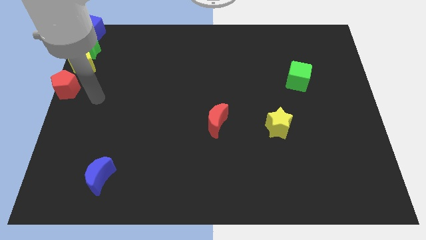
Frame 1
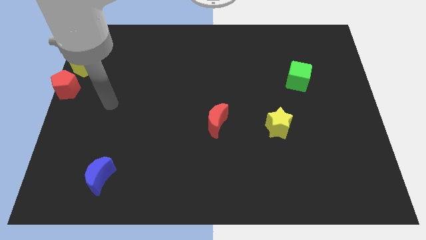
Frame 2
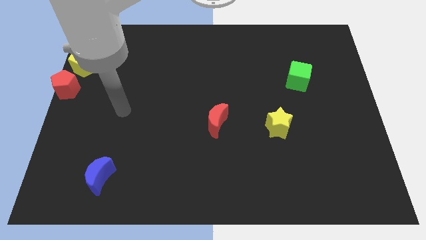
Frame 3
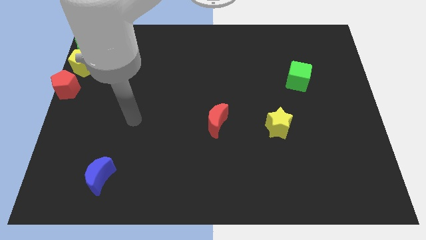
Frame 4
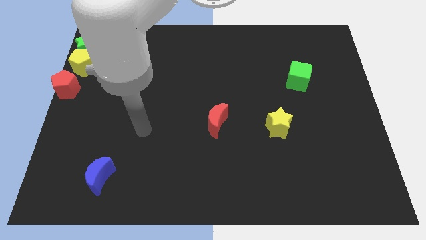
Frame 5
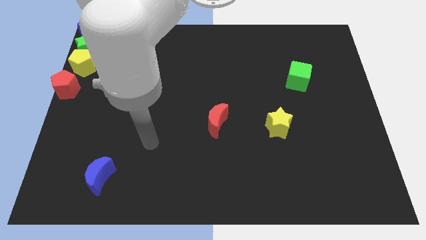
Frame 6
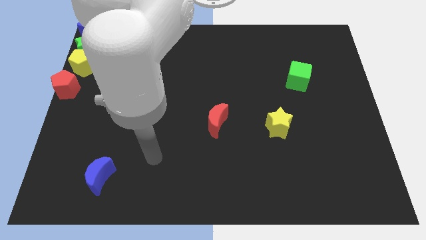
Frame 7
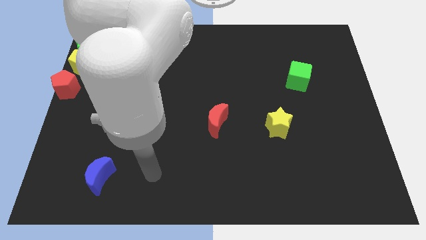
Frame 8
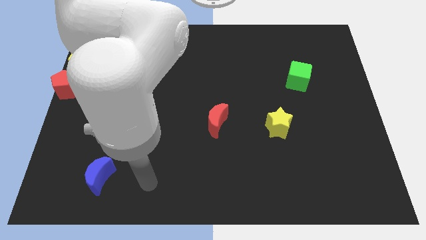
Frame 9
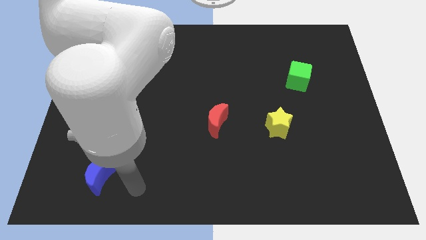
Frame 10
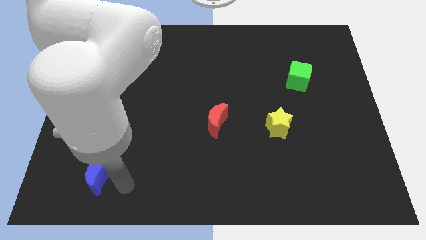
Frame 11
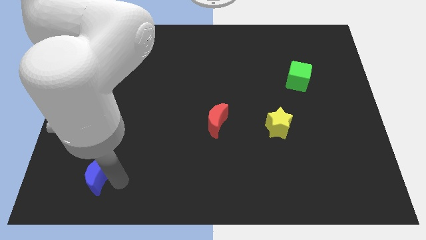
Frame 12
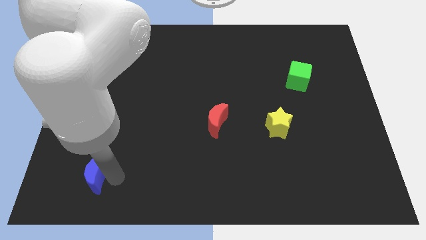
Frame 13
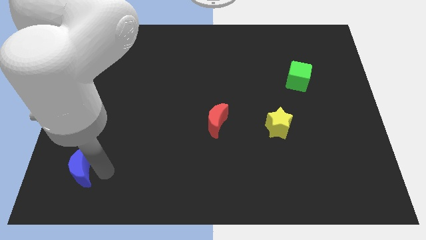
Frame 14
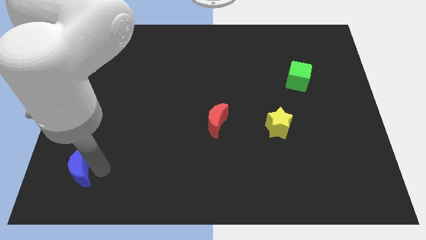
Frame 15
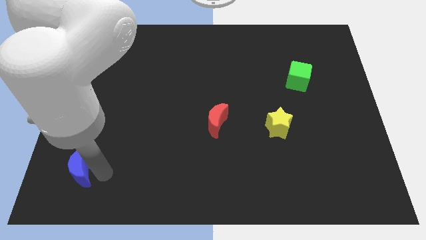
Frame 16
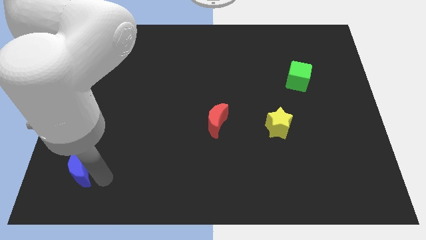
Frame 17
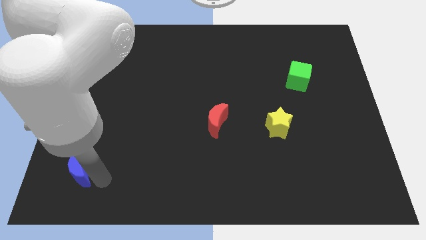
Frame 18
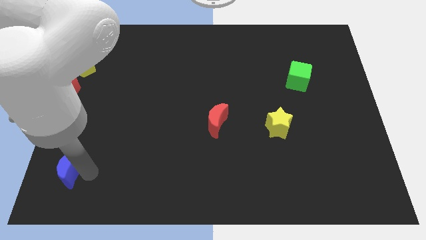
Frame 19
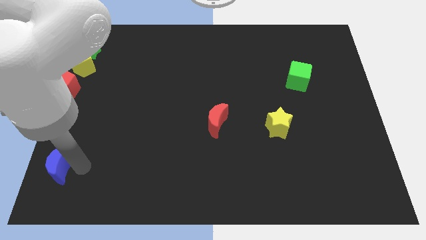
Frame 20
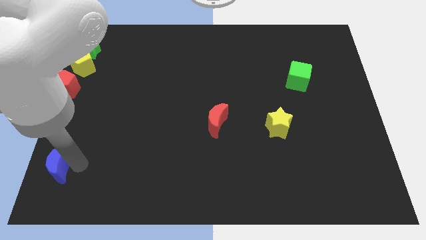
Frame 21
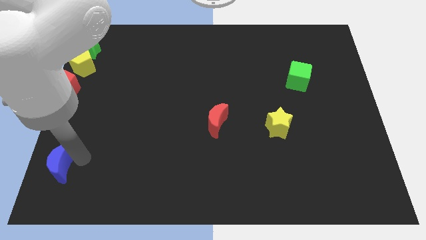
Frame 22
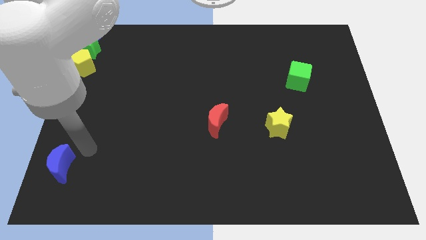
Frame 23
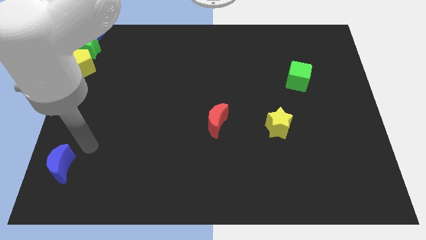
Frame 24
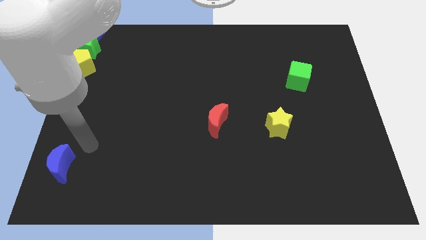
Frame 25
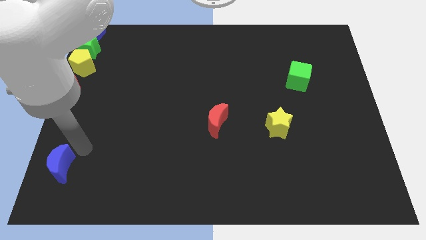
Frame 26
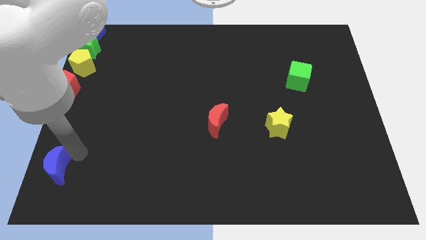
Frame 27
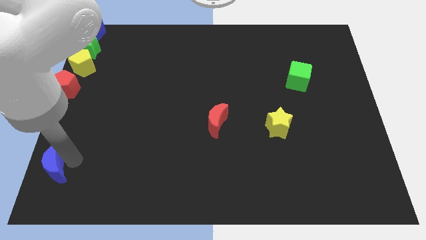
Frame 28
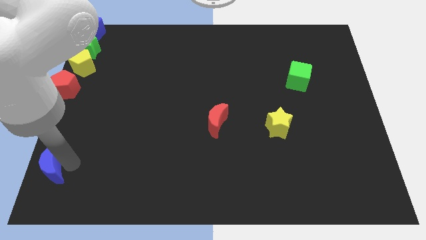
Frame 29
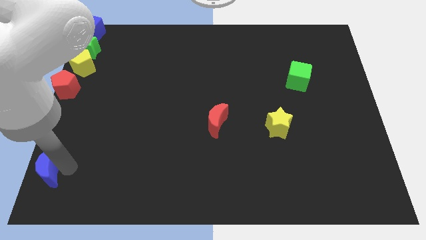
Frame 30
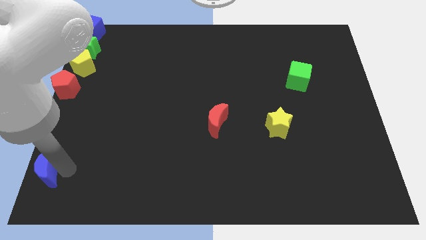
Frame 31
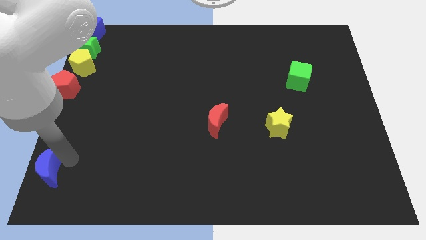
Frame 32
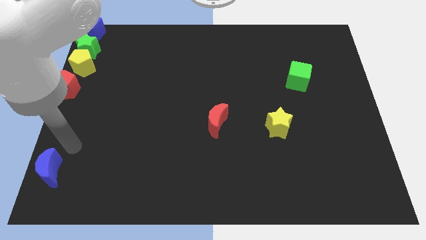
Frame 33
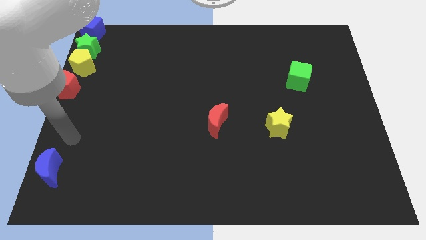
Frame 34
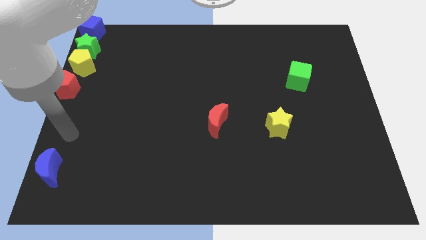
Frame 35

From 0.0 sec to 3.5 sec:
move blue moon to the bottom left
